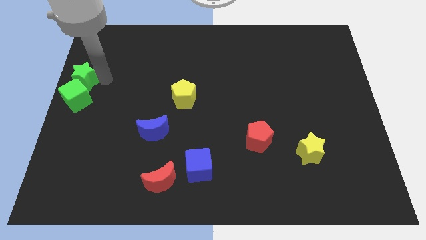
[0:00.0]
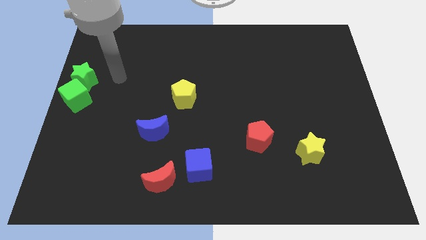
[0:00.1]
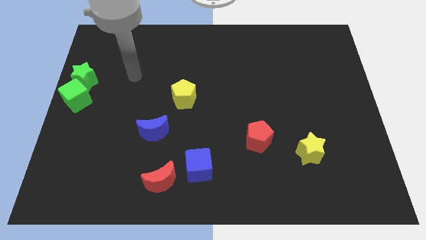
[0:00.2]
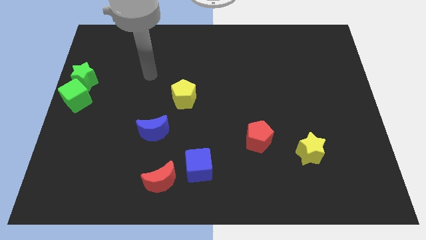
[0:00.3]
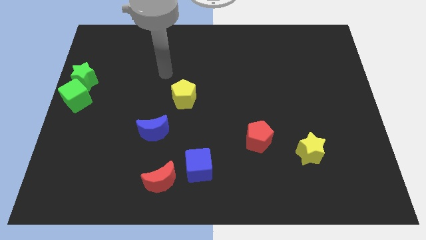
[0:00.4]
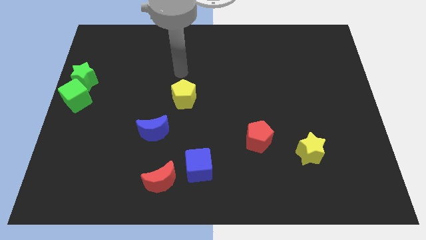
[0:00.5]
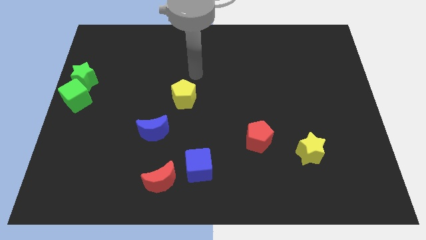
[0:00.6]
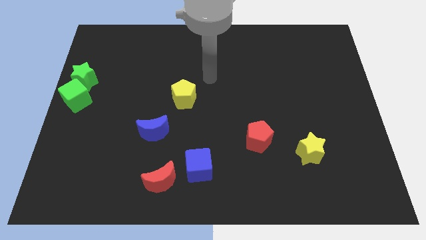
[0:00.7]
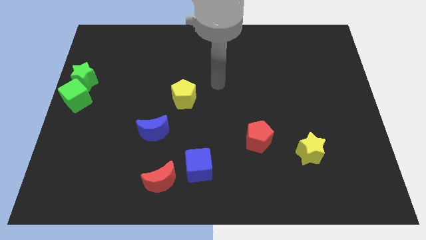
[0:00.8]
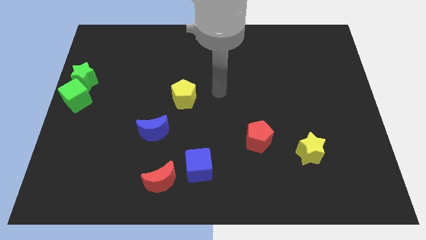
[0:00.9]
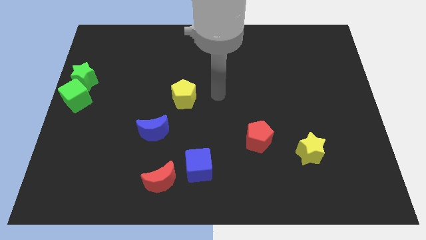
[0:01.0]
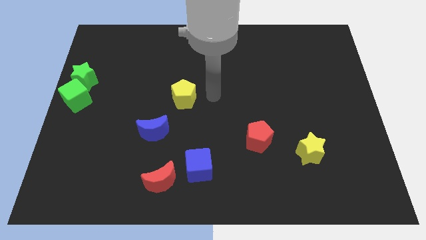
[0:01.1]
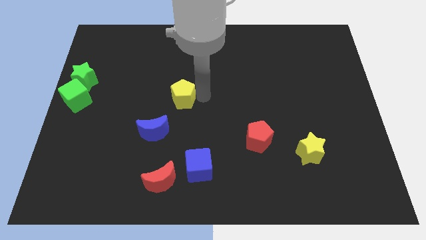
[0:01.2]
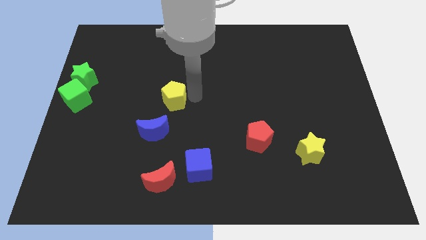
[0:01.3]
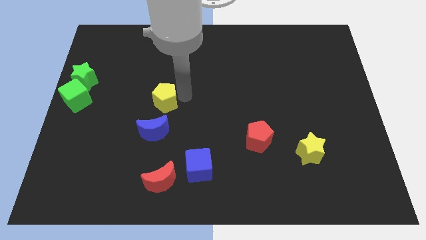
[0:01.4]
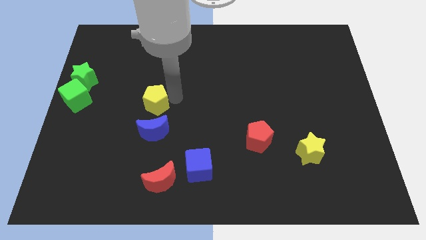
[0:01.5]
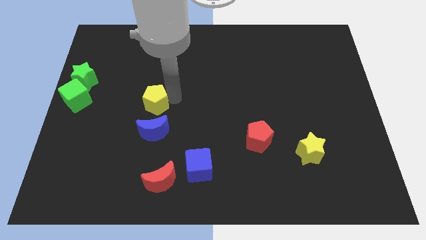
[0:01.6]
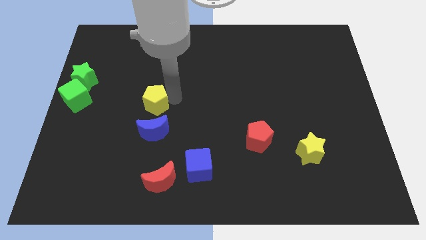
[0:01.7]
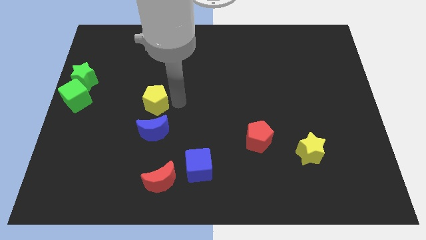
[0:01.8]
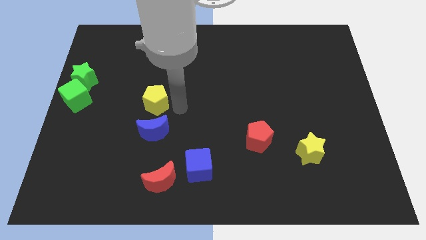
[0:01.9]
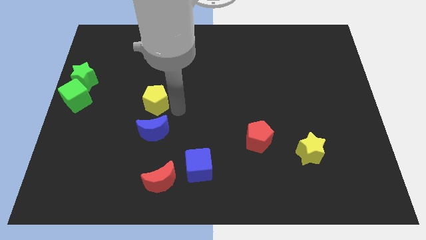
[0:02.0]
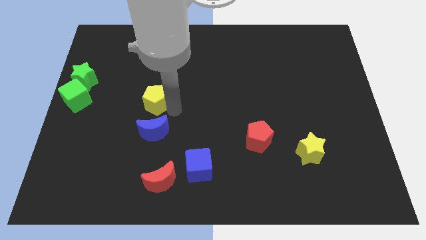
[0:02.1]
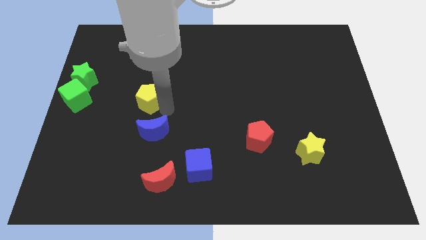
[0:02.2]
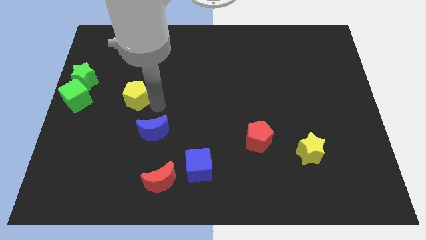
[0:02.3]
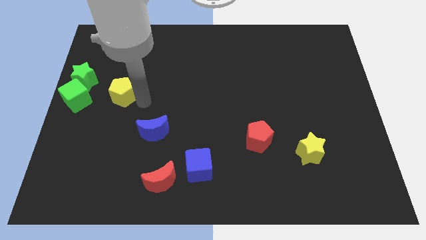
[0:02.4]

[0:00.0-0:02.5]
move yellow pentagon towards green cube

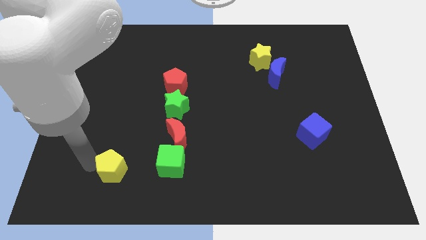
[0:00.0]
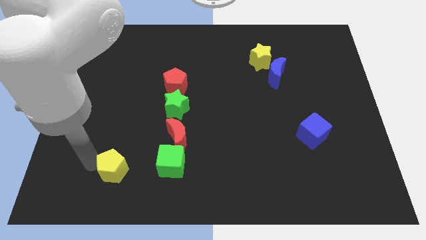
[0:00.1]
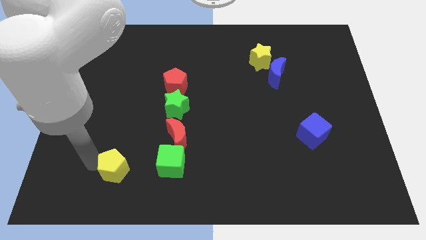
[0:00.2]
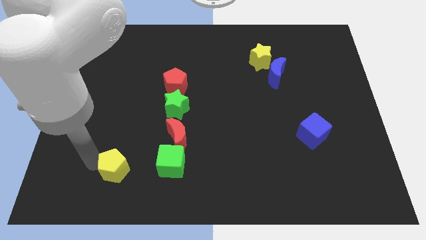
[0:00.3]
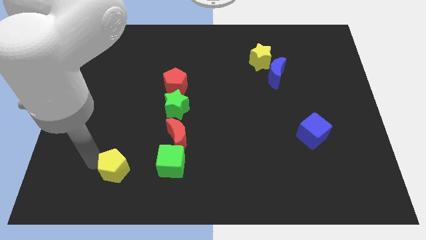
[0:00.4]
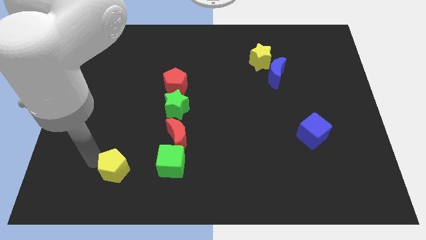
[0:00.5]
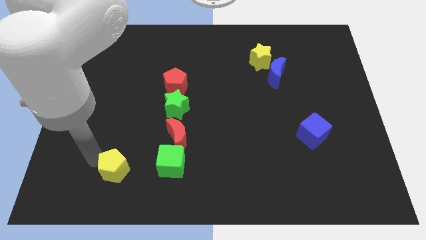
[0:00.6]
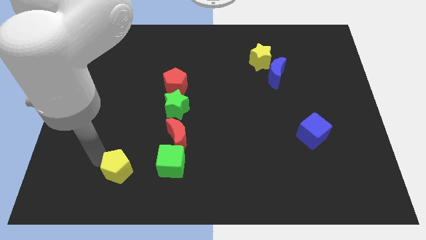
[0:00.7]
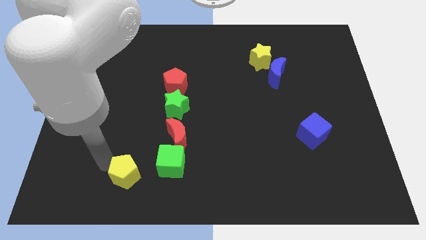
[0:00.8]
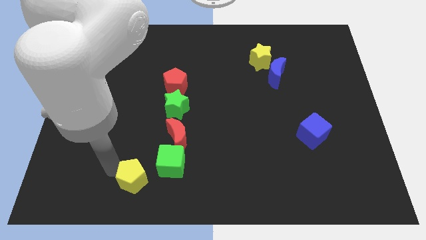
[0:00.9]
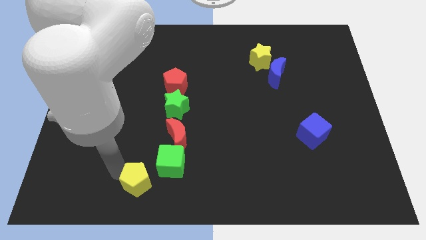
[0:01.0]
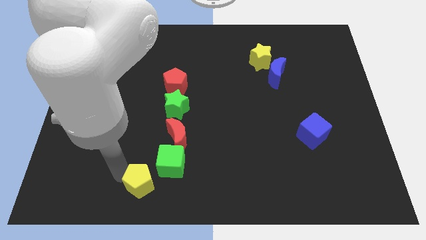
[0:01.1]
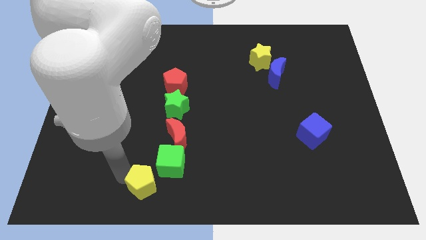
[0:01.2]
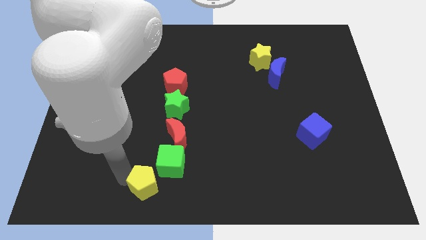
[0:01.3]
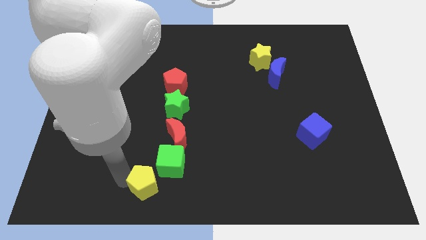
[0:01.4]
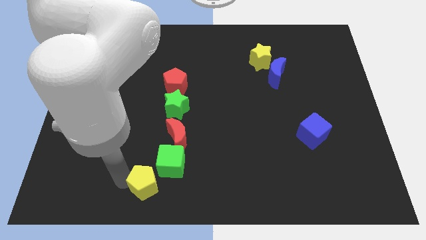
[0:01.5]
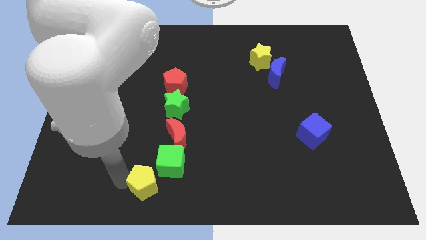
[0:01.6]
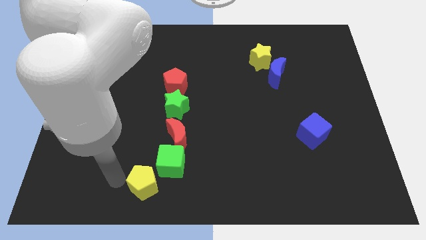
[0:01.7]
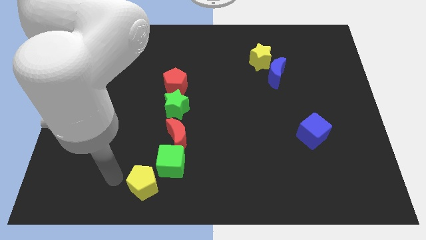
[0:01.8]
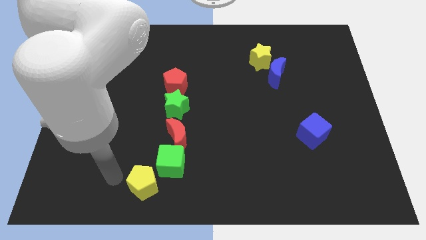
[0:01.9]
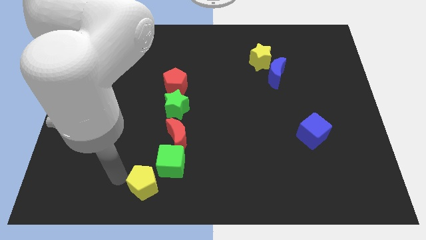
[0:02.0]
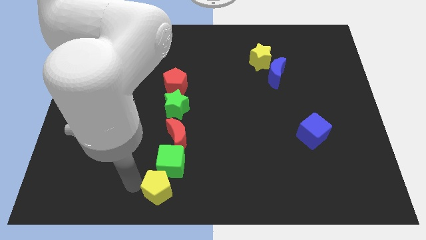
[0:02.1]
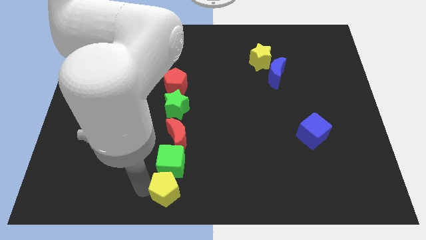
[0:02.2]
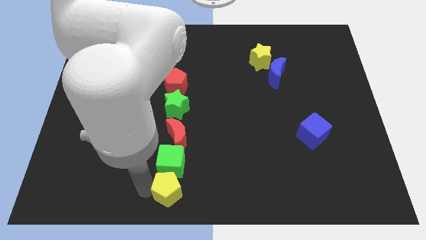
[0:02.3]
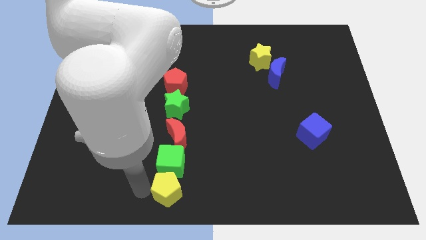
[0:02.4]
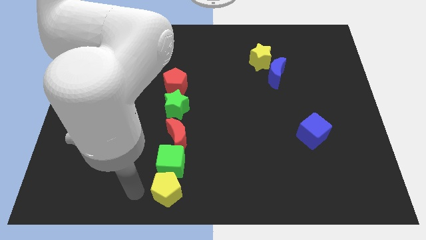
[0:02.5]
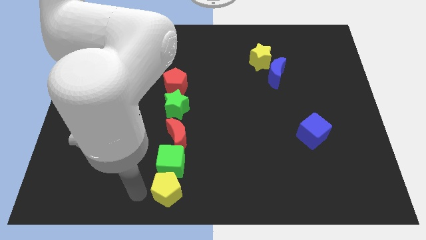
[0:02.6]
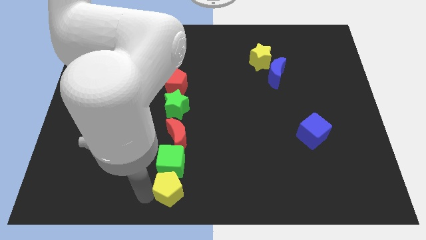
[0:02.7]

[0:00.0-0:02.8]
place the yellow pentagon below the green cube

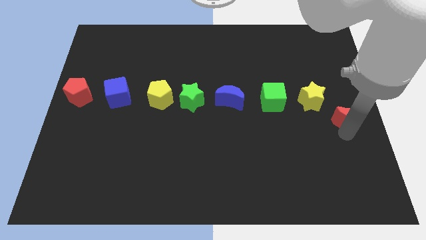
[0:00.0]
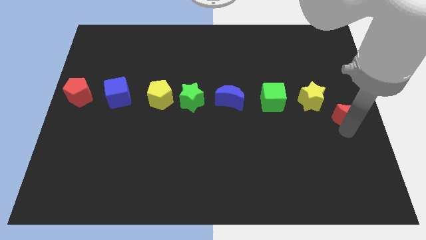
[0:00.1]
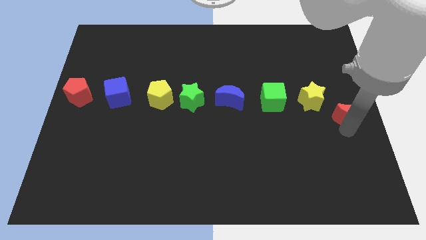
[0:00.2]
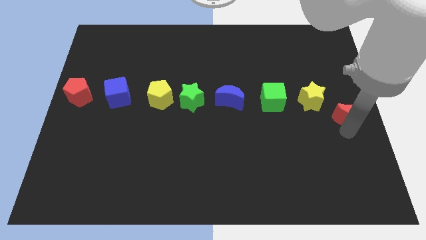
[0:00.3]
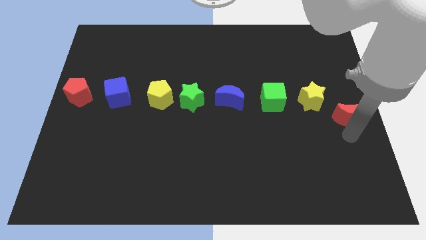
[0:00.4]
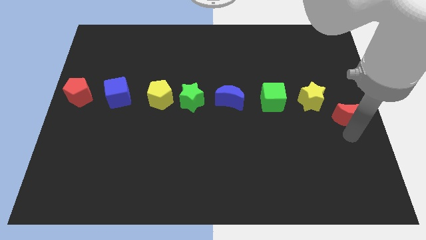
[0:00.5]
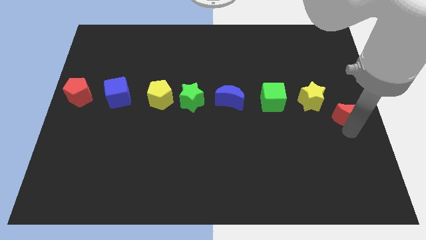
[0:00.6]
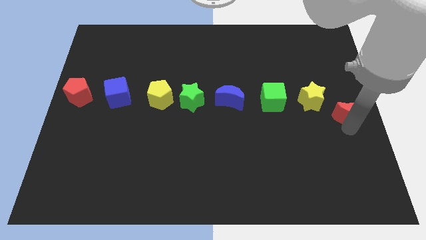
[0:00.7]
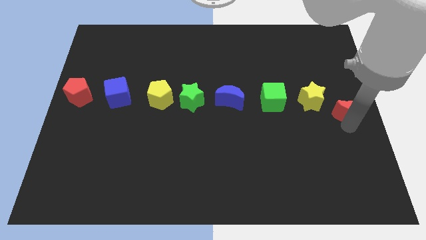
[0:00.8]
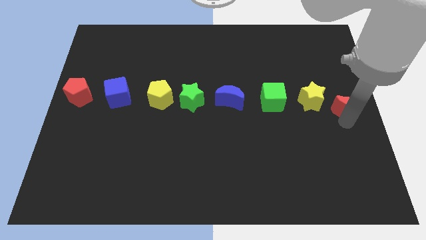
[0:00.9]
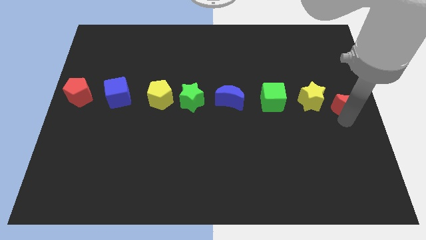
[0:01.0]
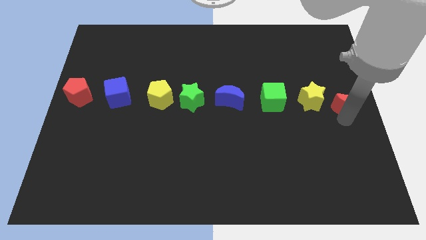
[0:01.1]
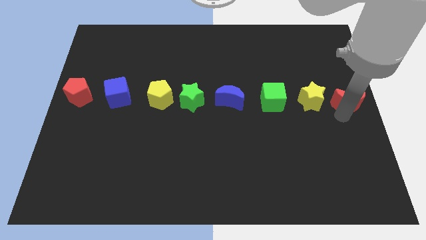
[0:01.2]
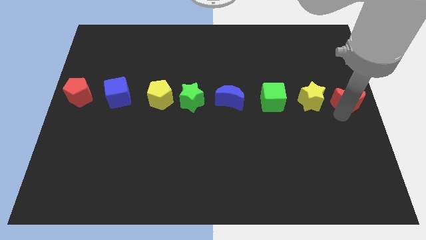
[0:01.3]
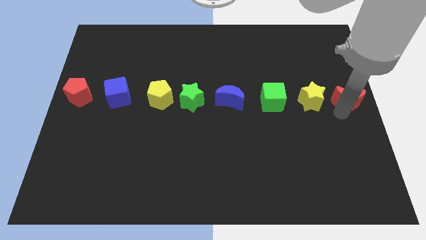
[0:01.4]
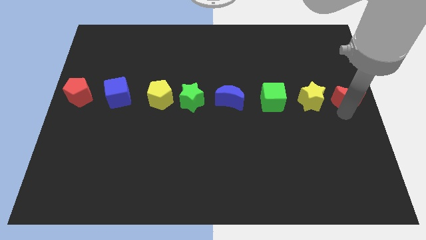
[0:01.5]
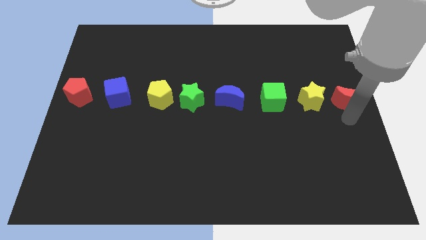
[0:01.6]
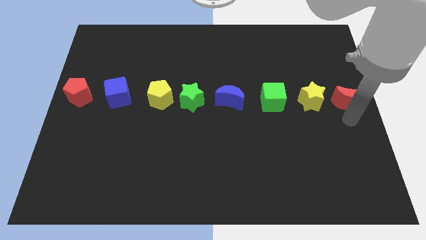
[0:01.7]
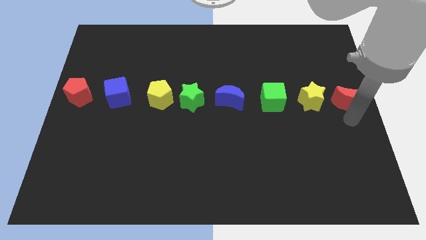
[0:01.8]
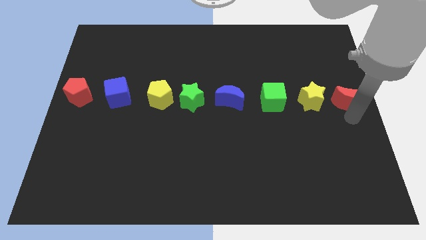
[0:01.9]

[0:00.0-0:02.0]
move the red moon to the right center

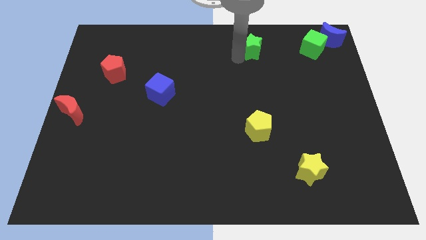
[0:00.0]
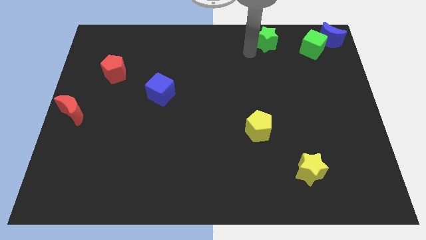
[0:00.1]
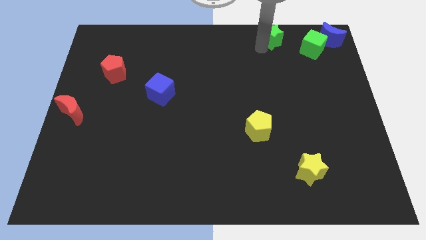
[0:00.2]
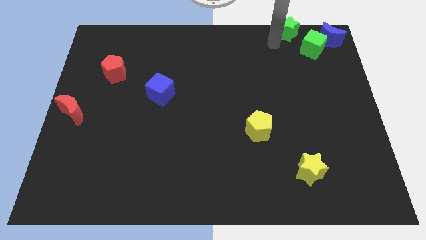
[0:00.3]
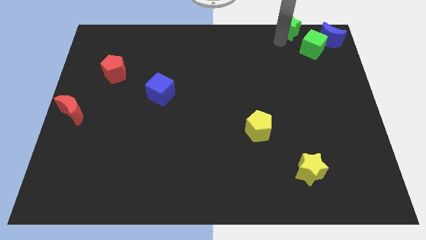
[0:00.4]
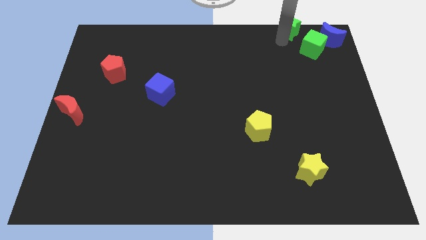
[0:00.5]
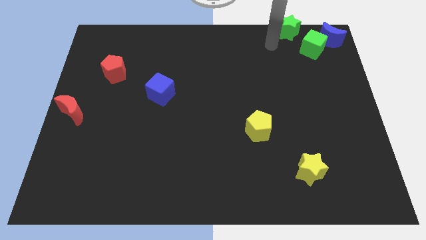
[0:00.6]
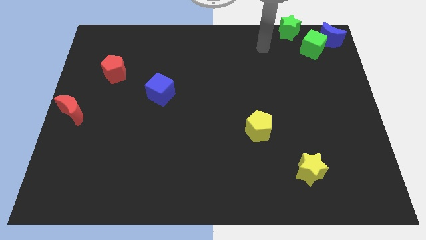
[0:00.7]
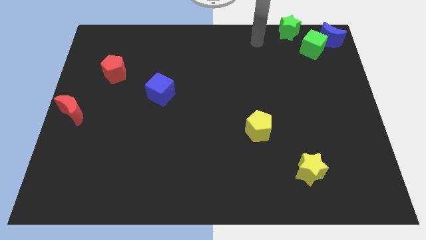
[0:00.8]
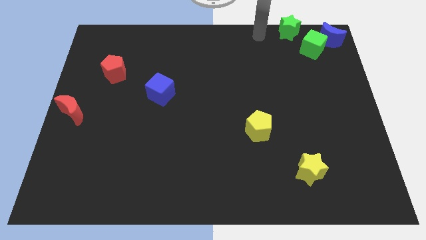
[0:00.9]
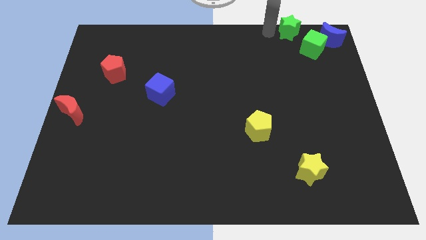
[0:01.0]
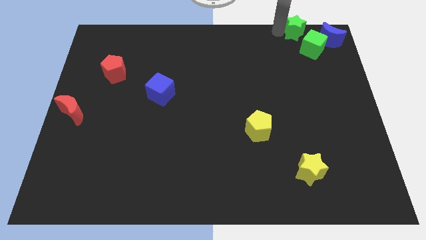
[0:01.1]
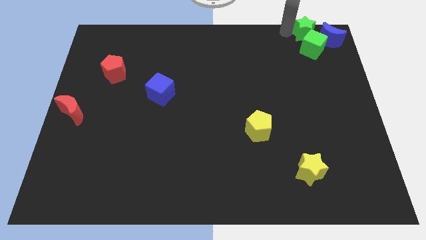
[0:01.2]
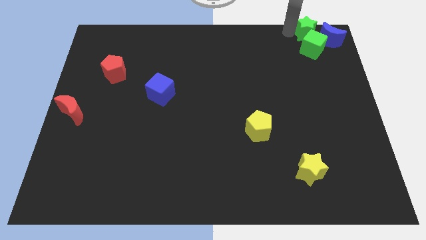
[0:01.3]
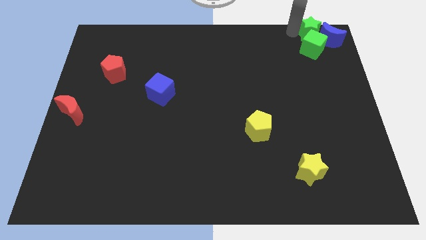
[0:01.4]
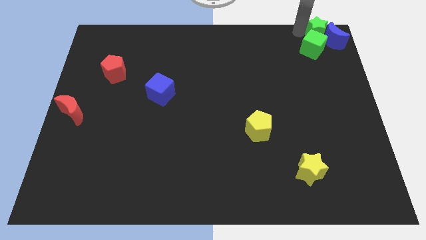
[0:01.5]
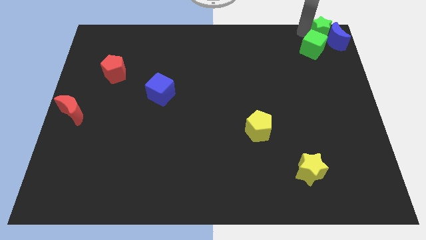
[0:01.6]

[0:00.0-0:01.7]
push the green star into the blue moon
